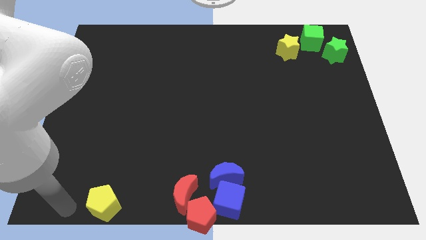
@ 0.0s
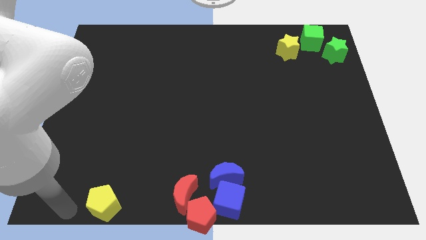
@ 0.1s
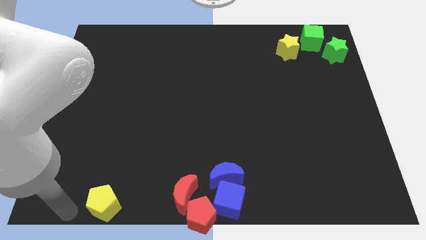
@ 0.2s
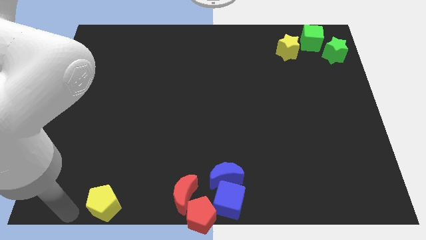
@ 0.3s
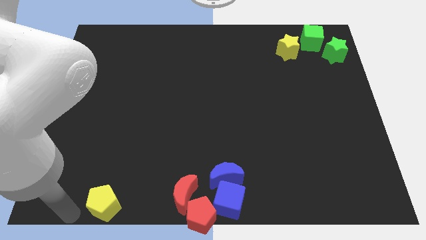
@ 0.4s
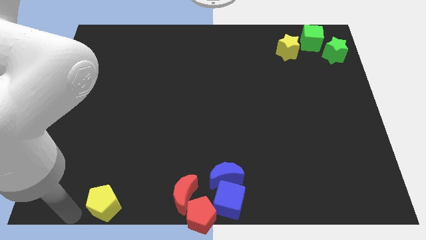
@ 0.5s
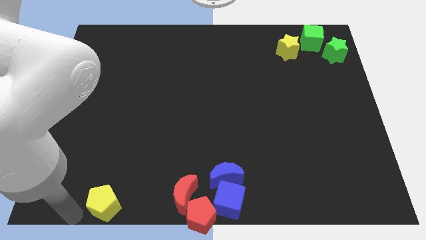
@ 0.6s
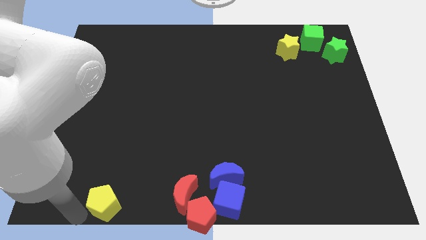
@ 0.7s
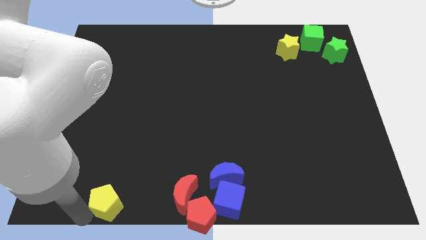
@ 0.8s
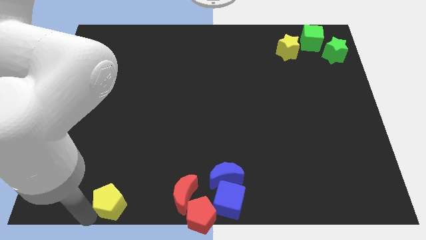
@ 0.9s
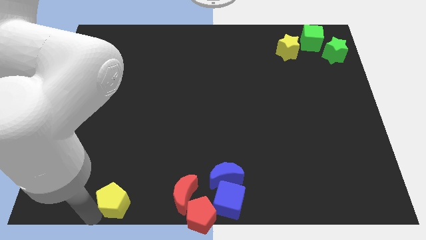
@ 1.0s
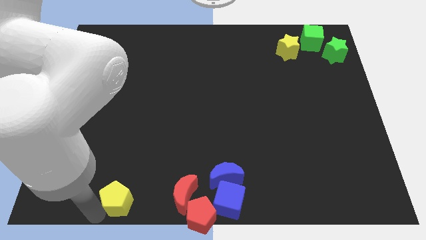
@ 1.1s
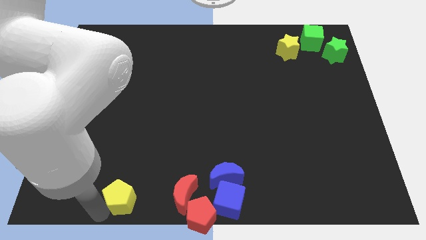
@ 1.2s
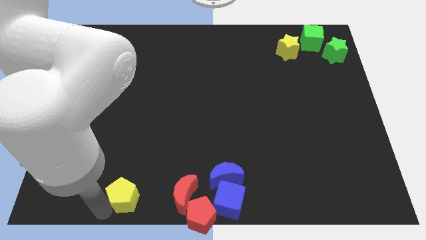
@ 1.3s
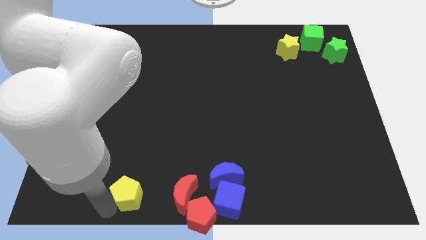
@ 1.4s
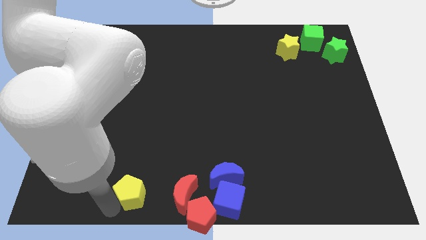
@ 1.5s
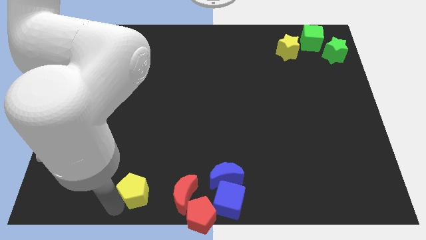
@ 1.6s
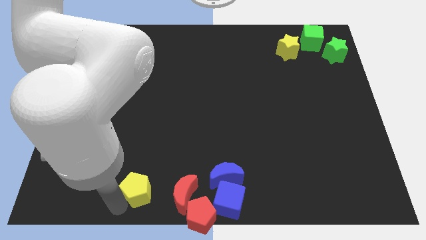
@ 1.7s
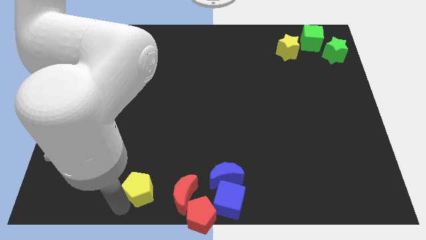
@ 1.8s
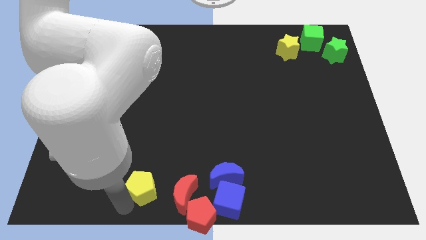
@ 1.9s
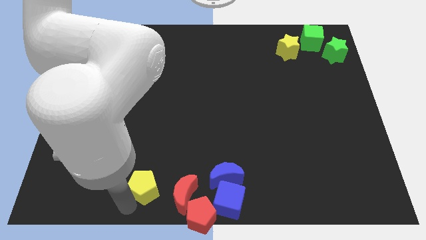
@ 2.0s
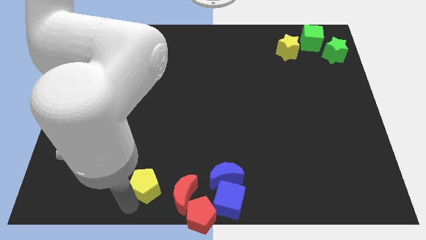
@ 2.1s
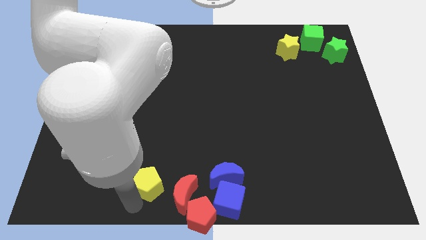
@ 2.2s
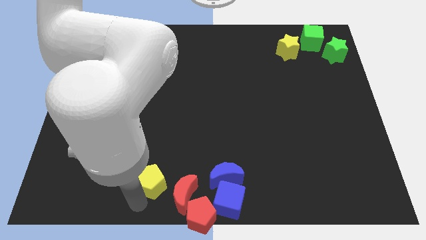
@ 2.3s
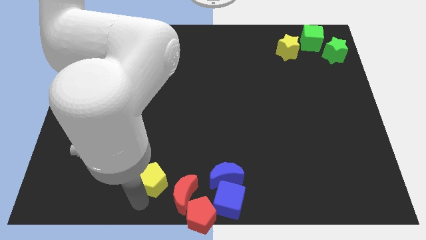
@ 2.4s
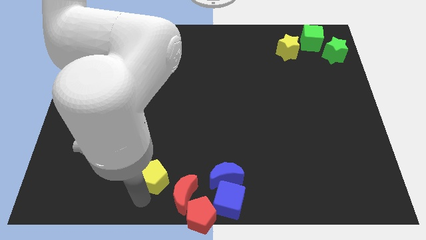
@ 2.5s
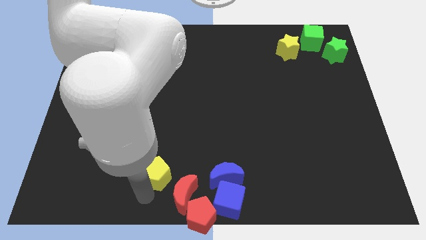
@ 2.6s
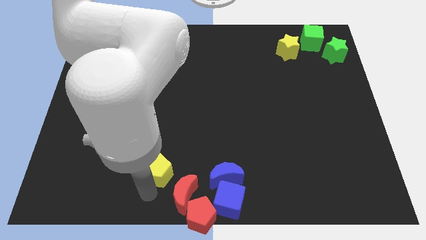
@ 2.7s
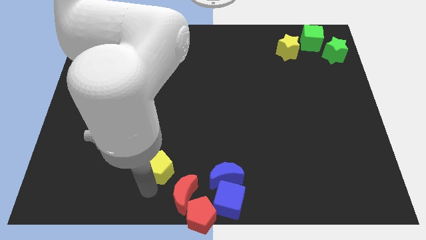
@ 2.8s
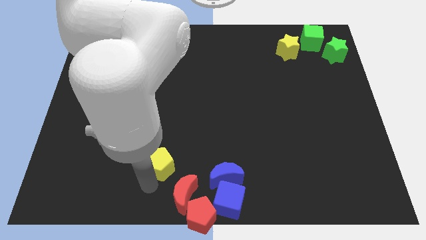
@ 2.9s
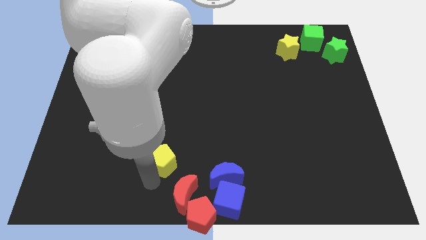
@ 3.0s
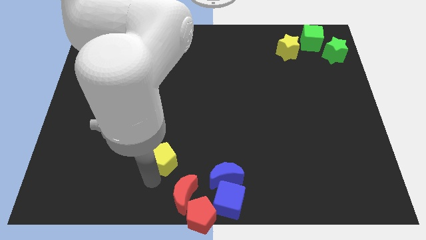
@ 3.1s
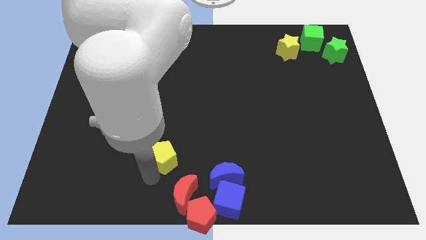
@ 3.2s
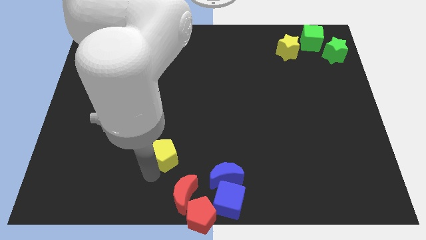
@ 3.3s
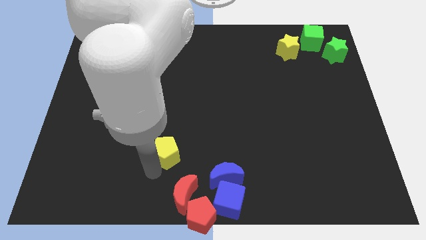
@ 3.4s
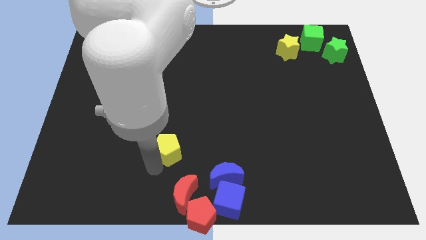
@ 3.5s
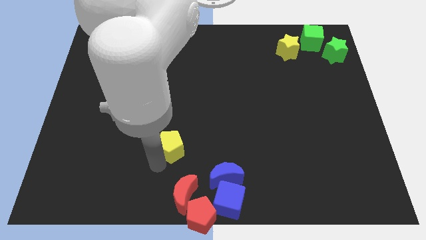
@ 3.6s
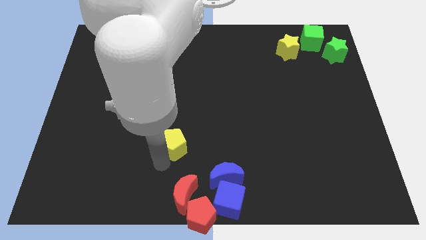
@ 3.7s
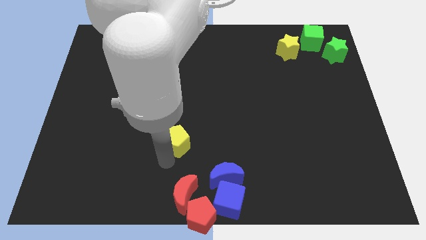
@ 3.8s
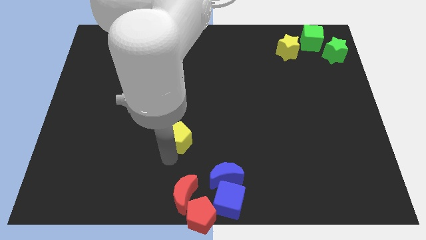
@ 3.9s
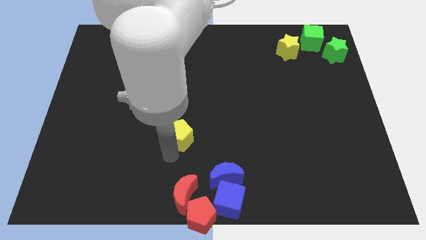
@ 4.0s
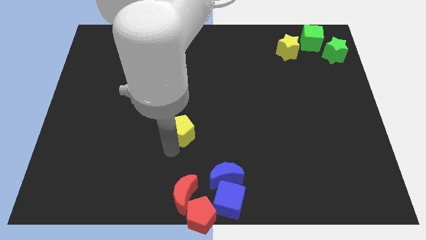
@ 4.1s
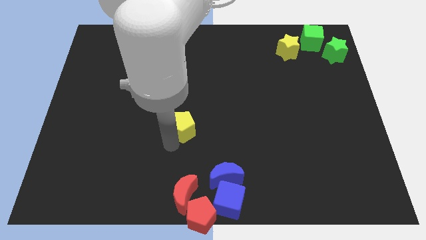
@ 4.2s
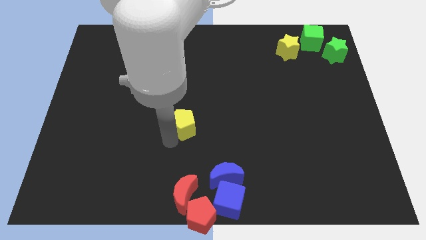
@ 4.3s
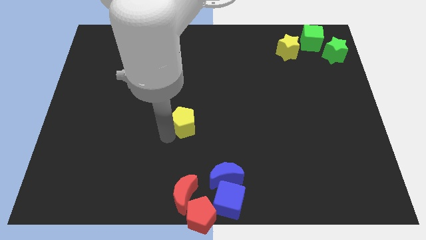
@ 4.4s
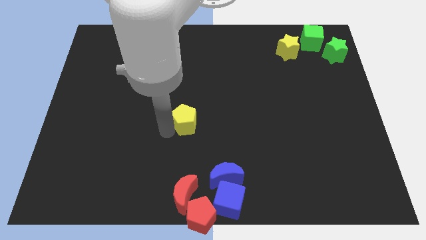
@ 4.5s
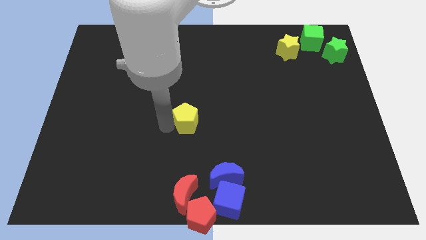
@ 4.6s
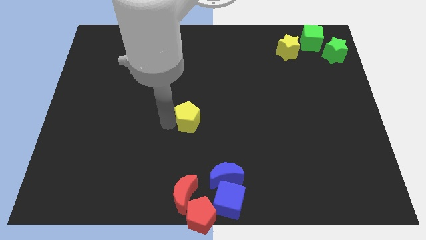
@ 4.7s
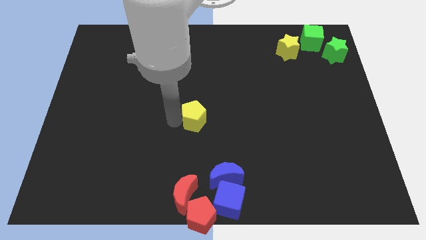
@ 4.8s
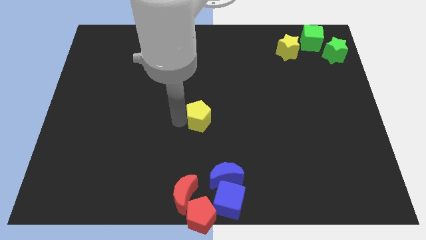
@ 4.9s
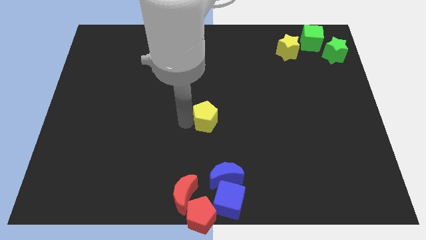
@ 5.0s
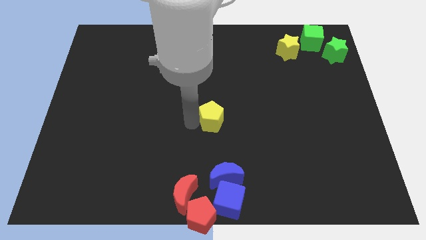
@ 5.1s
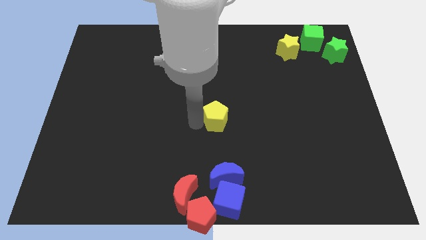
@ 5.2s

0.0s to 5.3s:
place the yellow pentagon at the center of the board

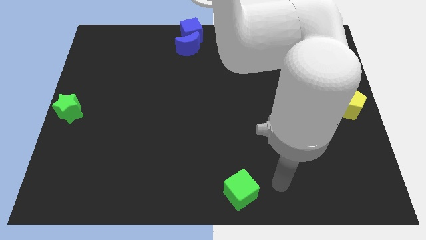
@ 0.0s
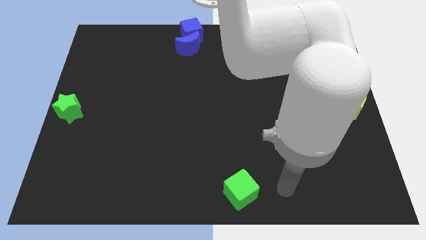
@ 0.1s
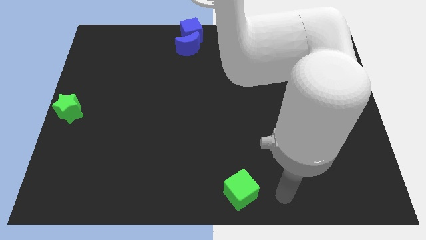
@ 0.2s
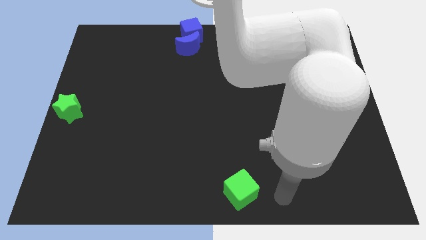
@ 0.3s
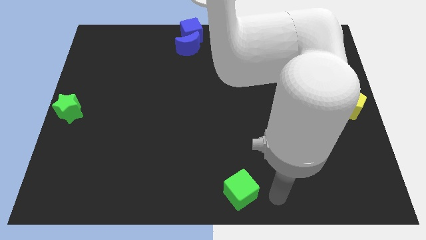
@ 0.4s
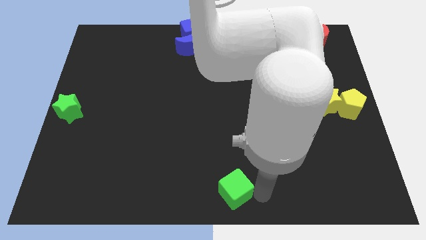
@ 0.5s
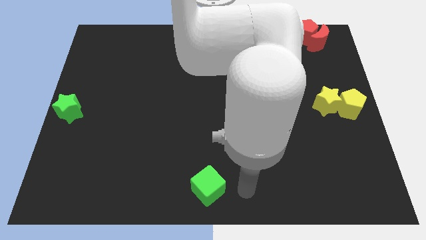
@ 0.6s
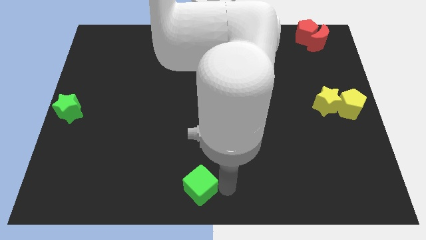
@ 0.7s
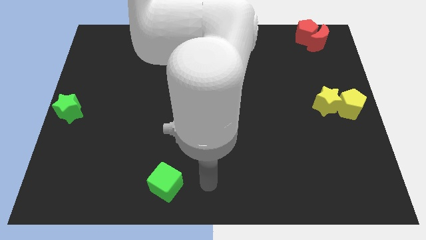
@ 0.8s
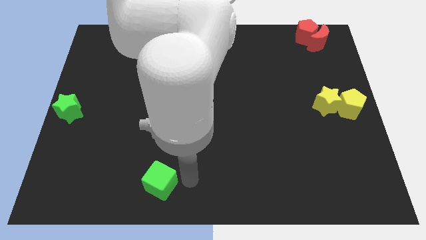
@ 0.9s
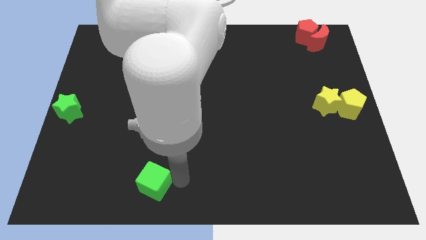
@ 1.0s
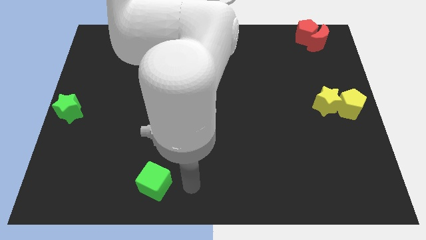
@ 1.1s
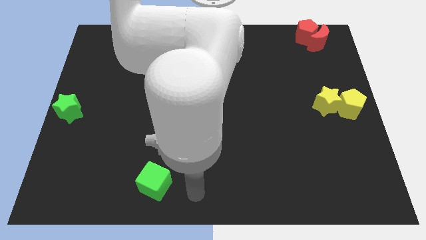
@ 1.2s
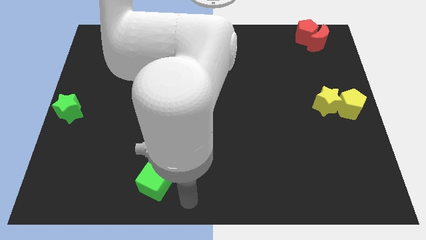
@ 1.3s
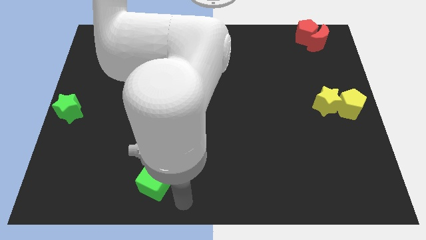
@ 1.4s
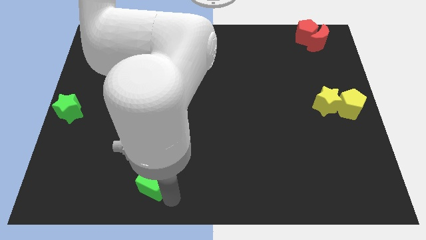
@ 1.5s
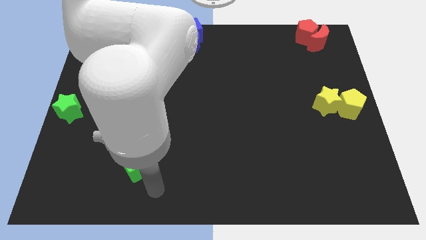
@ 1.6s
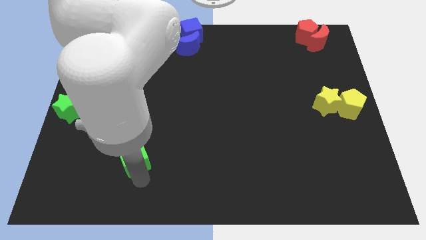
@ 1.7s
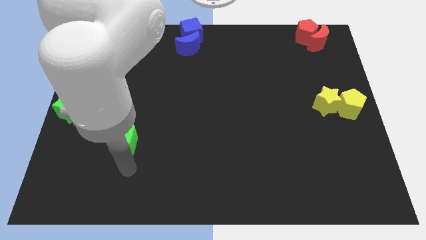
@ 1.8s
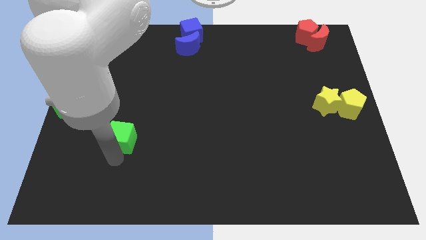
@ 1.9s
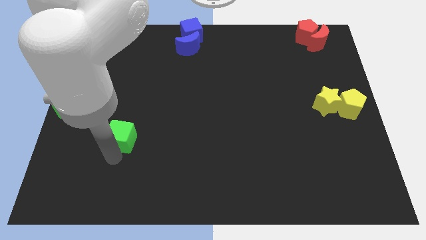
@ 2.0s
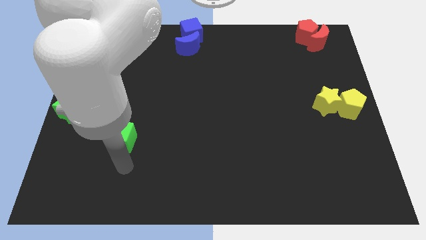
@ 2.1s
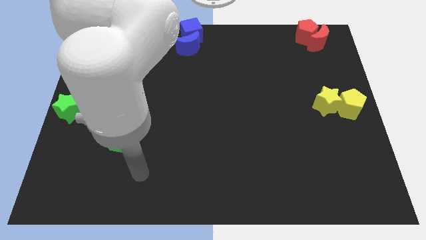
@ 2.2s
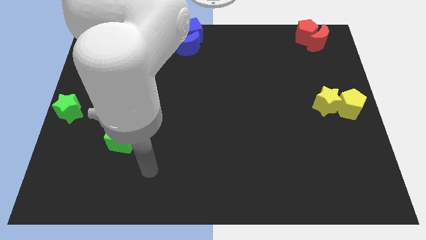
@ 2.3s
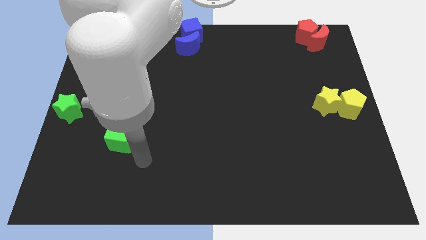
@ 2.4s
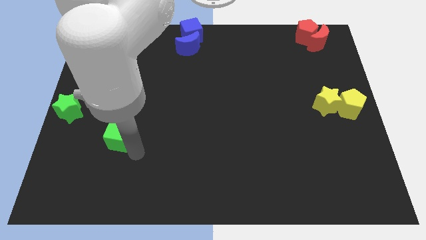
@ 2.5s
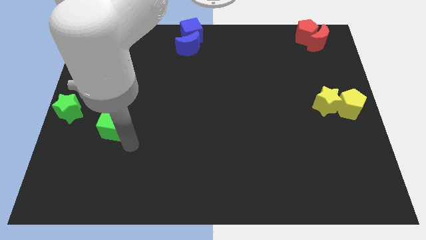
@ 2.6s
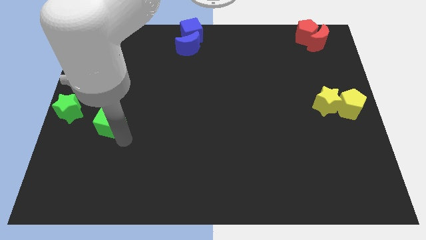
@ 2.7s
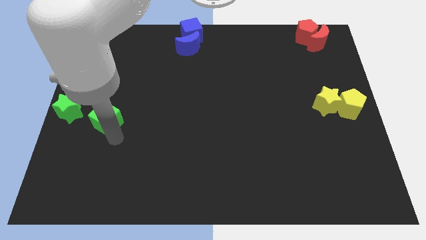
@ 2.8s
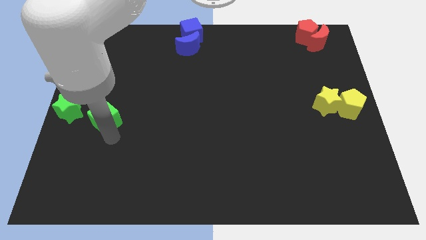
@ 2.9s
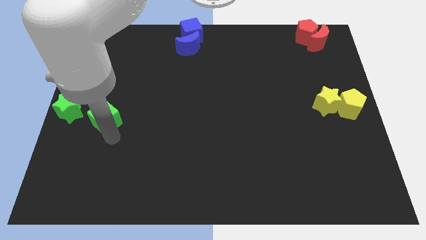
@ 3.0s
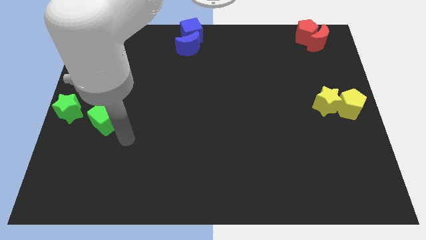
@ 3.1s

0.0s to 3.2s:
move the green cube diagonally bottom right to the green star

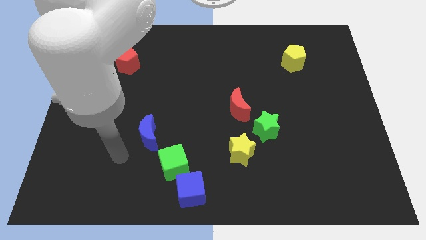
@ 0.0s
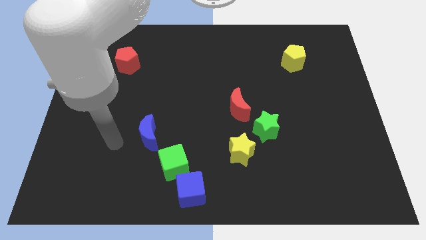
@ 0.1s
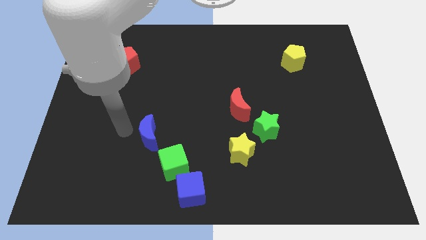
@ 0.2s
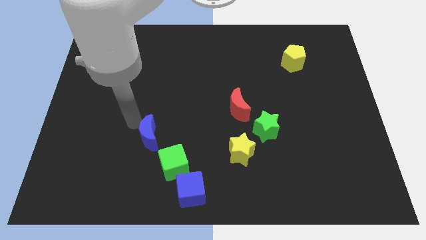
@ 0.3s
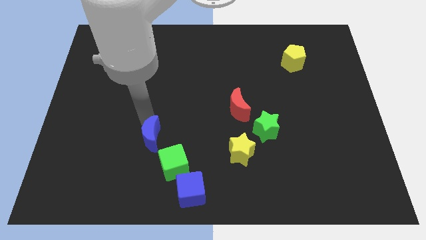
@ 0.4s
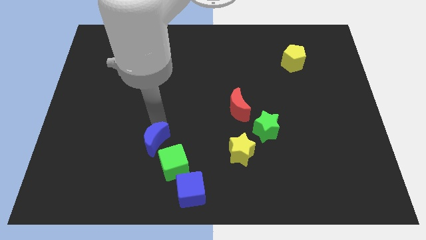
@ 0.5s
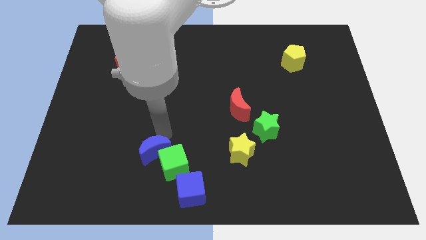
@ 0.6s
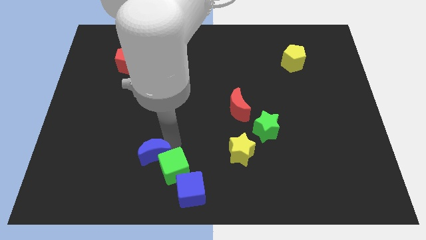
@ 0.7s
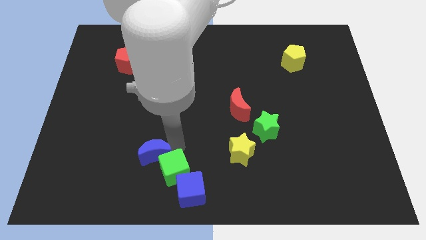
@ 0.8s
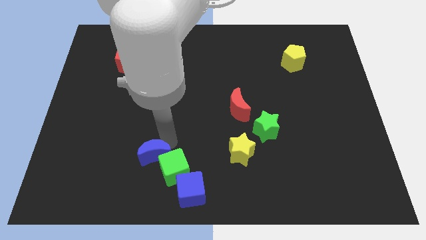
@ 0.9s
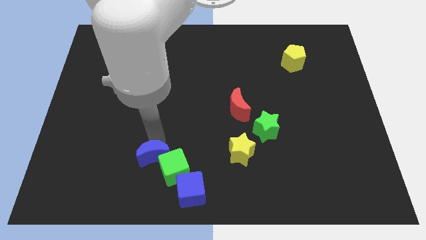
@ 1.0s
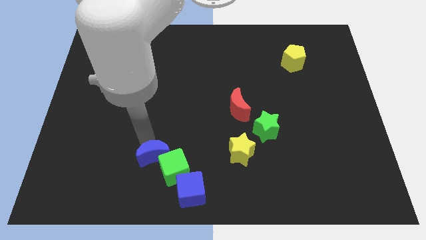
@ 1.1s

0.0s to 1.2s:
push the blue moon into green cube
